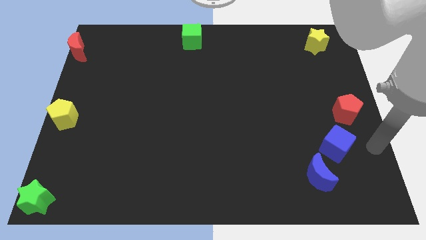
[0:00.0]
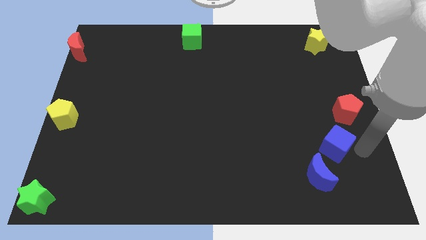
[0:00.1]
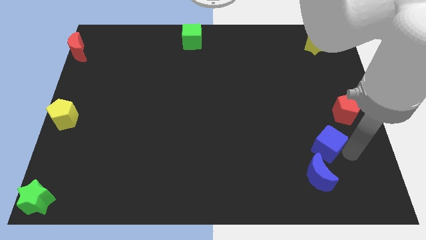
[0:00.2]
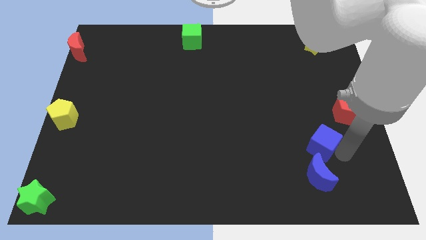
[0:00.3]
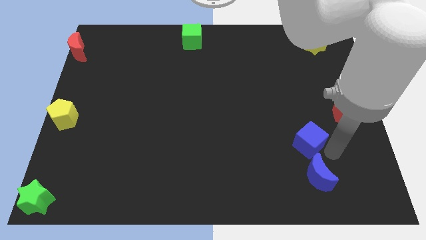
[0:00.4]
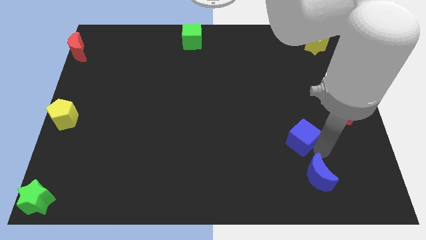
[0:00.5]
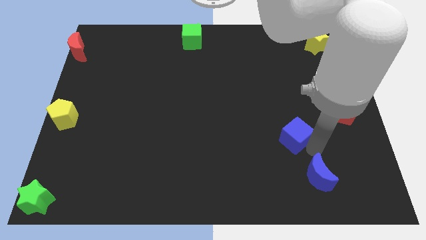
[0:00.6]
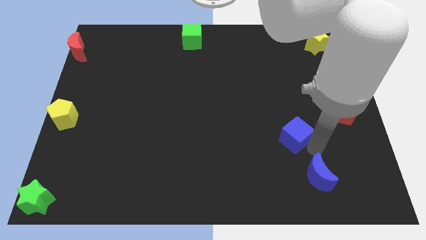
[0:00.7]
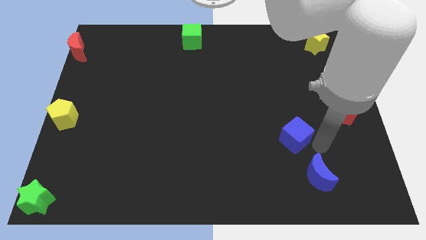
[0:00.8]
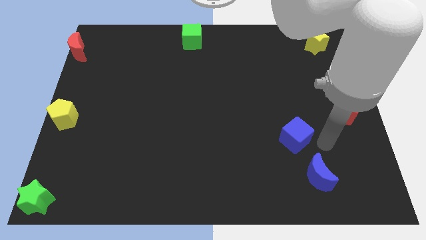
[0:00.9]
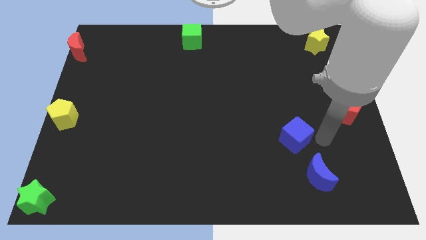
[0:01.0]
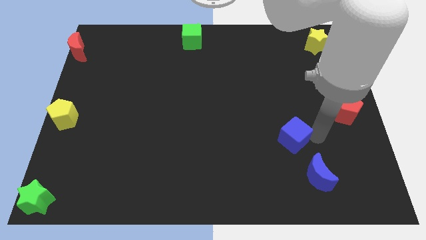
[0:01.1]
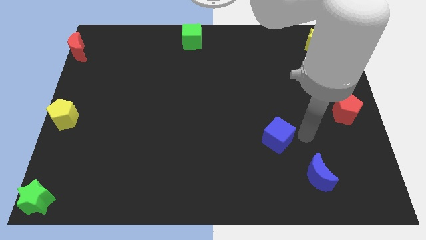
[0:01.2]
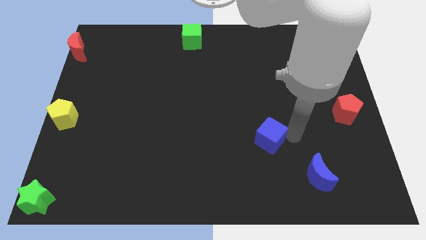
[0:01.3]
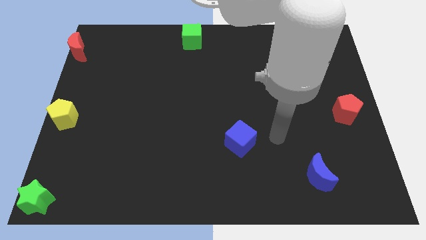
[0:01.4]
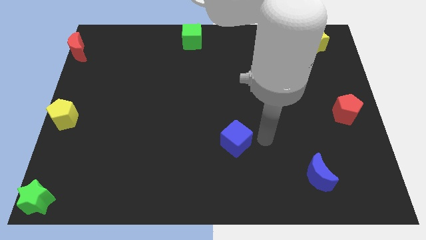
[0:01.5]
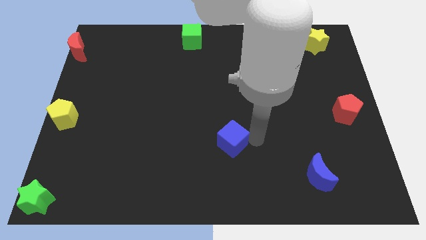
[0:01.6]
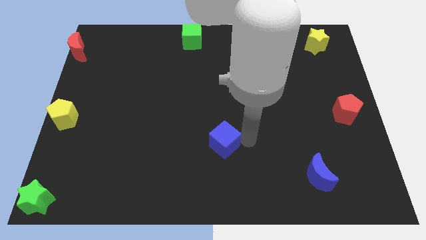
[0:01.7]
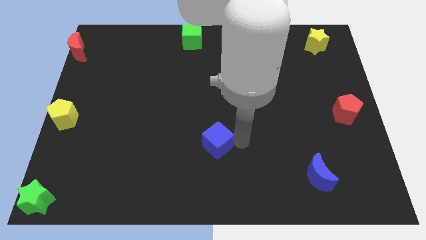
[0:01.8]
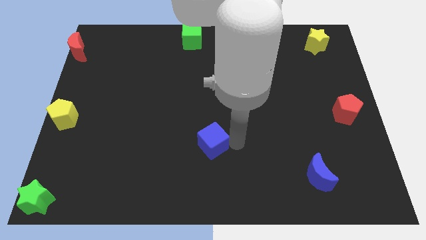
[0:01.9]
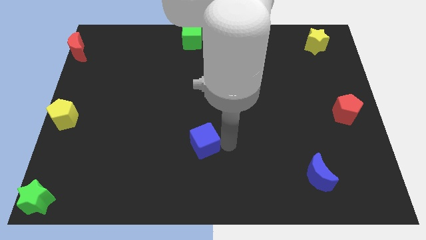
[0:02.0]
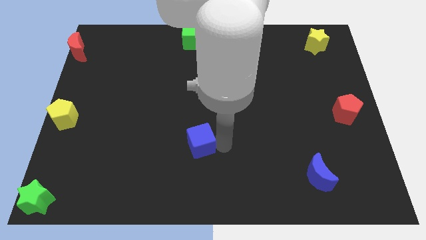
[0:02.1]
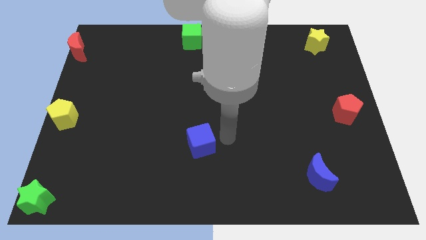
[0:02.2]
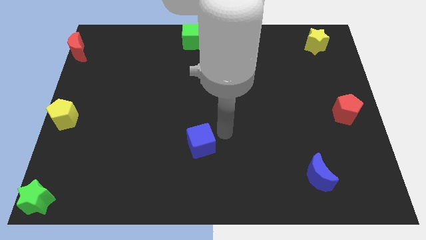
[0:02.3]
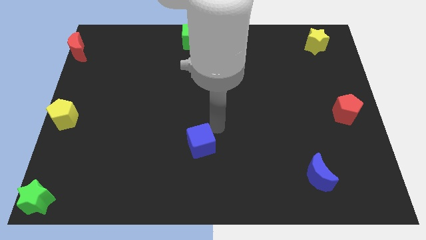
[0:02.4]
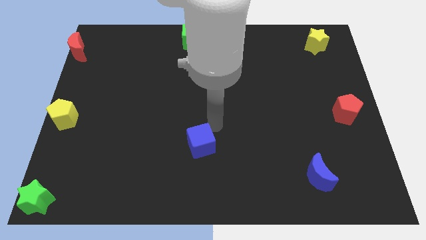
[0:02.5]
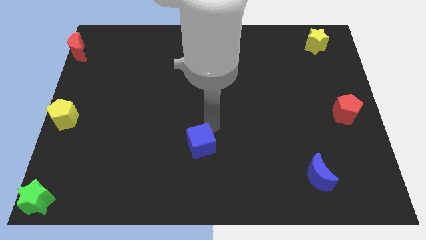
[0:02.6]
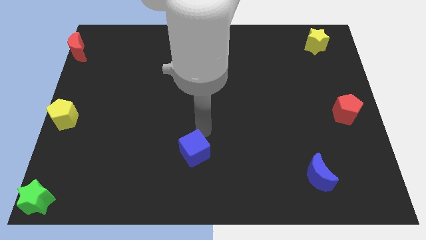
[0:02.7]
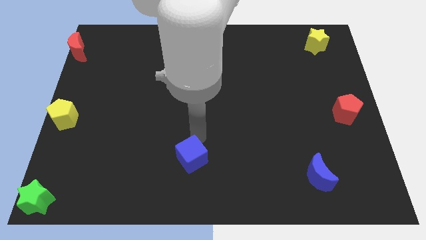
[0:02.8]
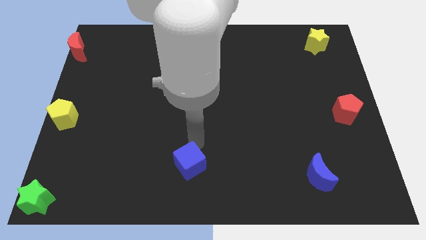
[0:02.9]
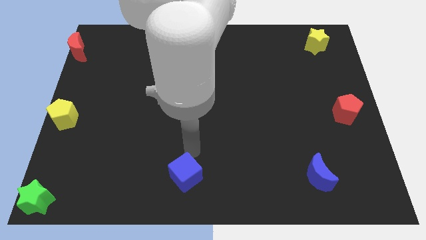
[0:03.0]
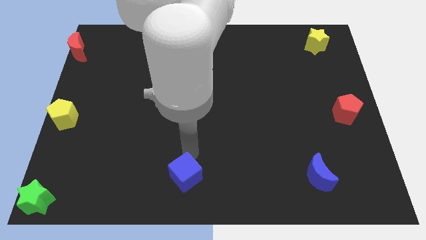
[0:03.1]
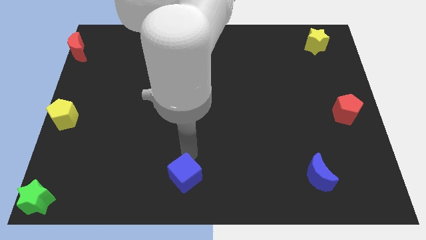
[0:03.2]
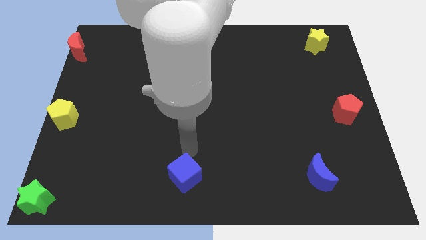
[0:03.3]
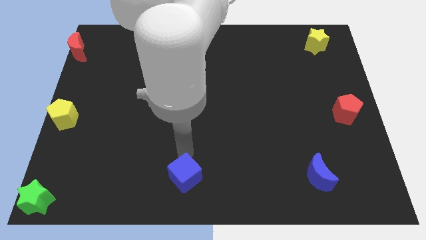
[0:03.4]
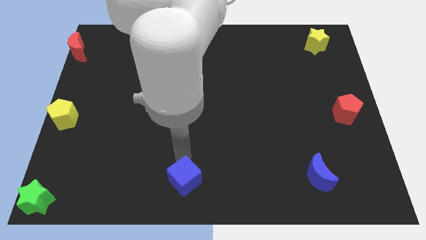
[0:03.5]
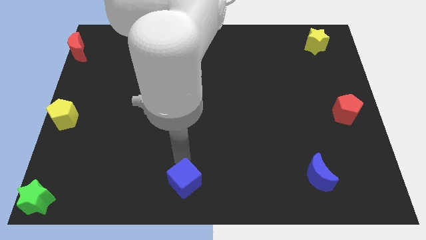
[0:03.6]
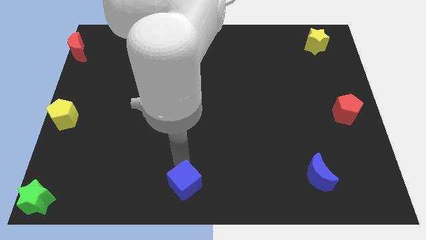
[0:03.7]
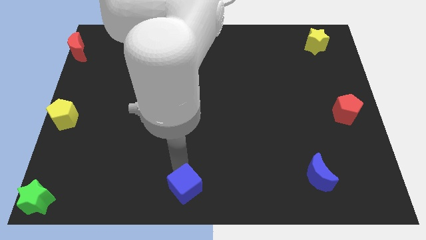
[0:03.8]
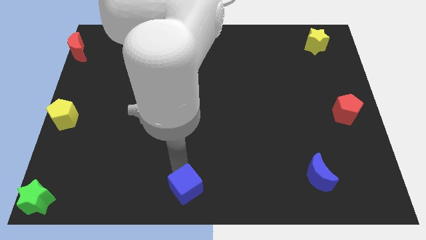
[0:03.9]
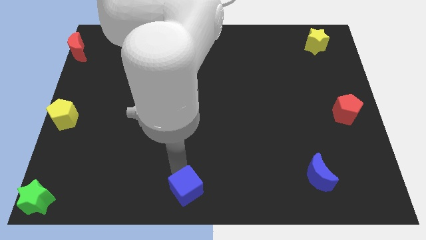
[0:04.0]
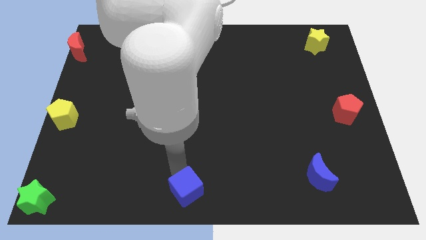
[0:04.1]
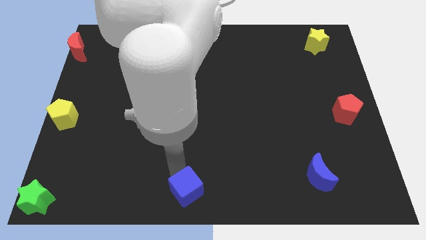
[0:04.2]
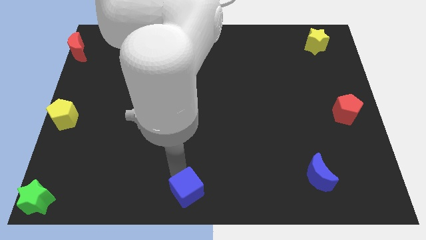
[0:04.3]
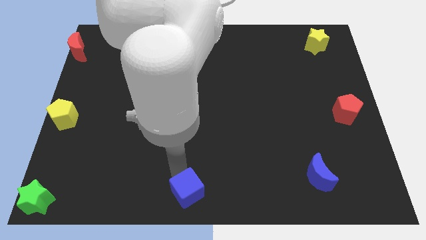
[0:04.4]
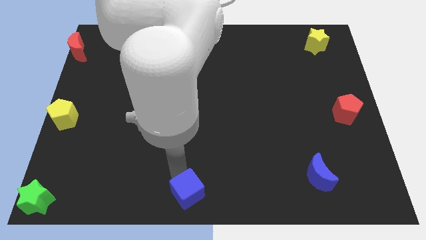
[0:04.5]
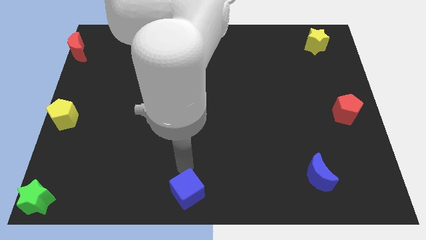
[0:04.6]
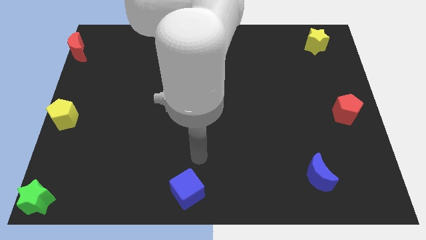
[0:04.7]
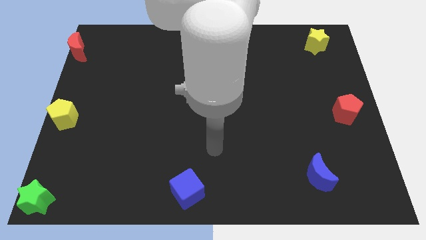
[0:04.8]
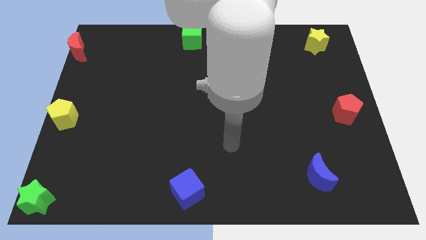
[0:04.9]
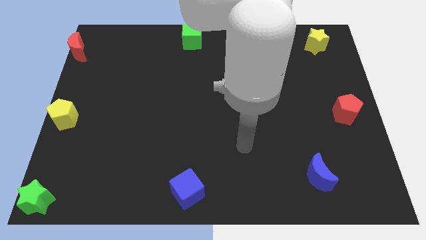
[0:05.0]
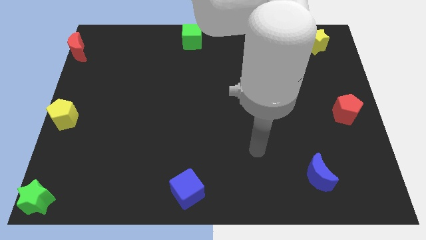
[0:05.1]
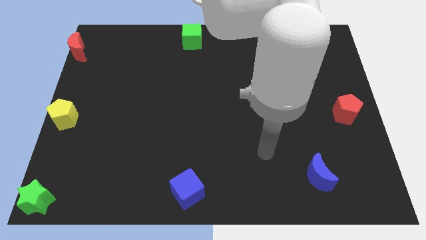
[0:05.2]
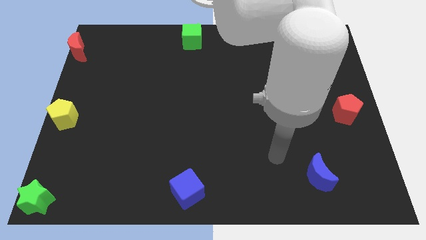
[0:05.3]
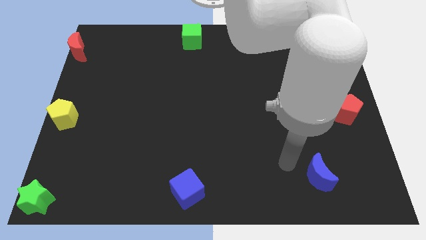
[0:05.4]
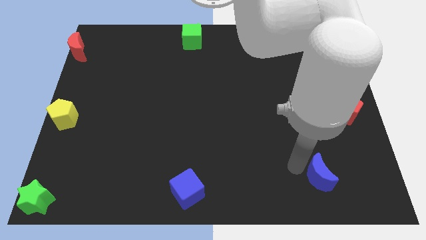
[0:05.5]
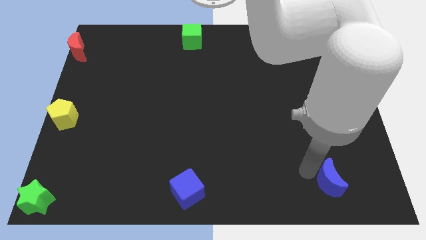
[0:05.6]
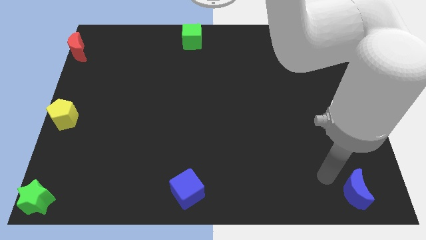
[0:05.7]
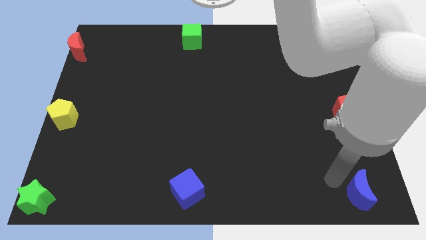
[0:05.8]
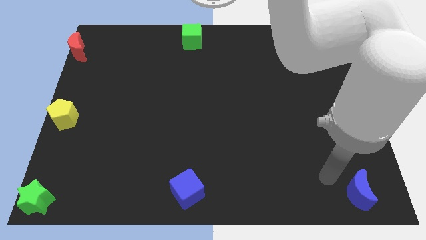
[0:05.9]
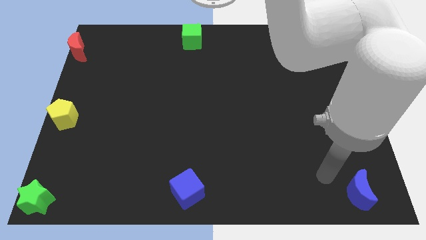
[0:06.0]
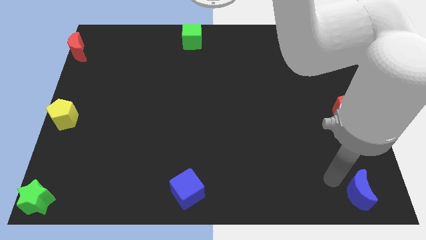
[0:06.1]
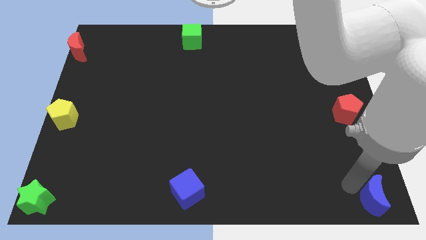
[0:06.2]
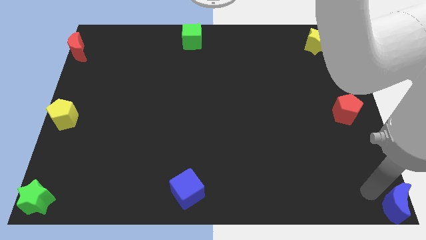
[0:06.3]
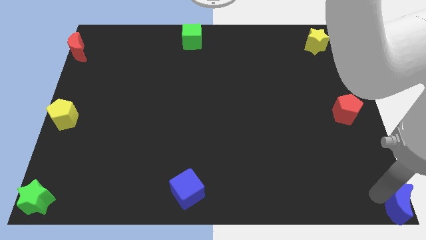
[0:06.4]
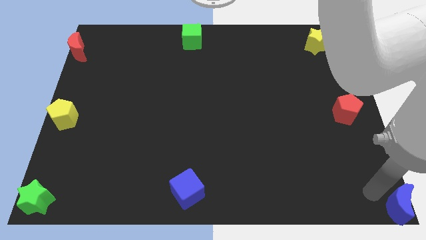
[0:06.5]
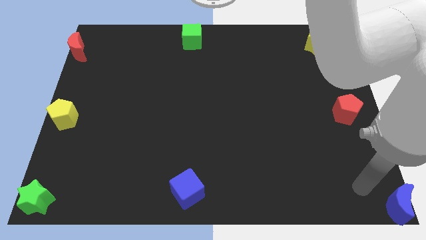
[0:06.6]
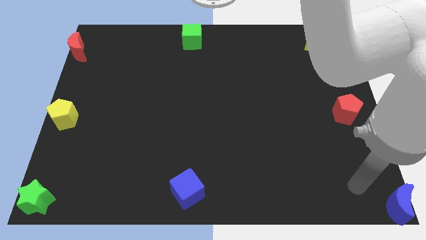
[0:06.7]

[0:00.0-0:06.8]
push the blue cube towards the bottom center of the board

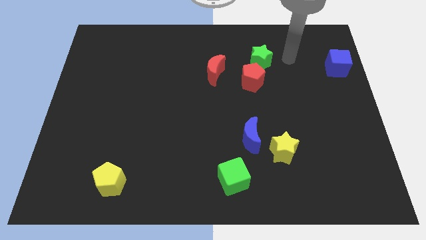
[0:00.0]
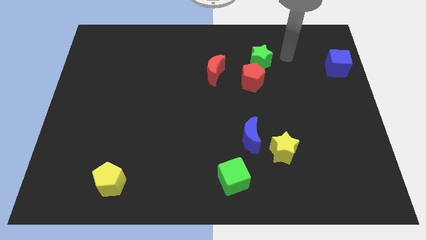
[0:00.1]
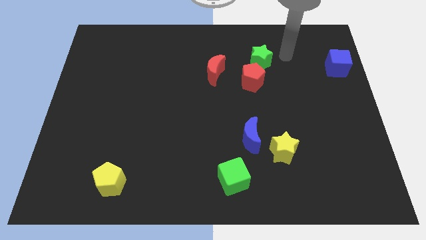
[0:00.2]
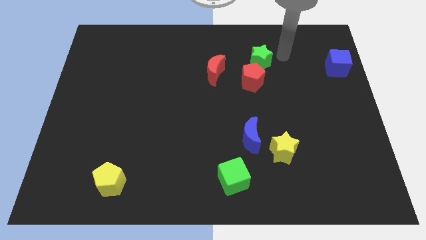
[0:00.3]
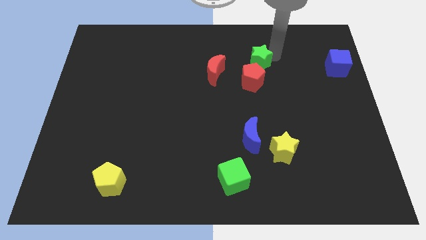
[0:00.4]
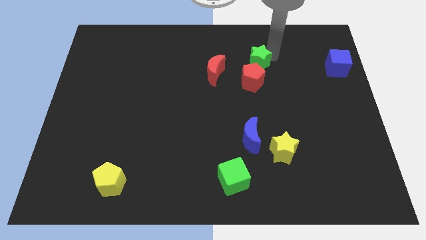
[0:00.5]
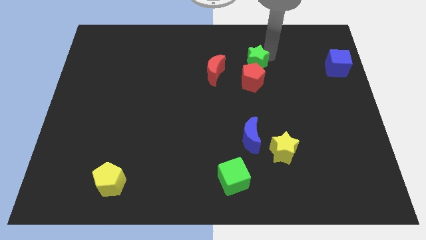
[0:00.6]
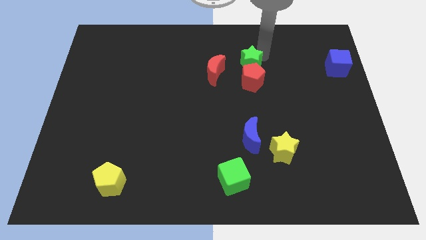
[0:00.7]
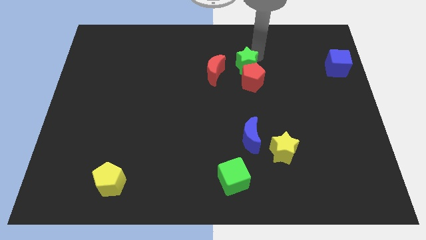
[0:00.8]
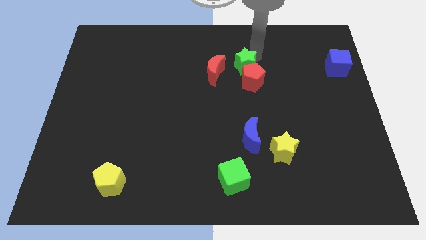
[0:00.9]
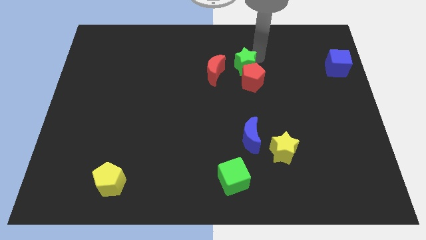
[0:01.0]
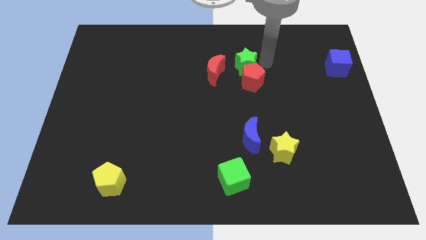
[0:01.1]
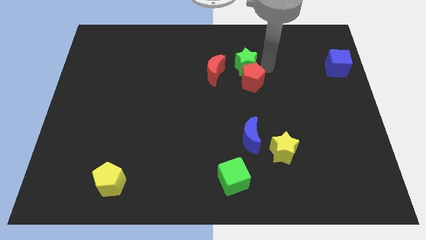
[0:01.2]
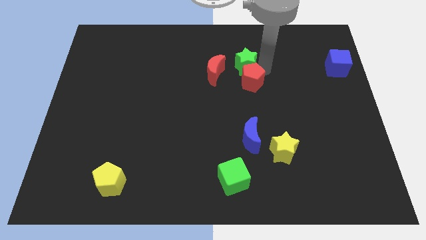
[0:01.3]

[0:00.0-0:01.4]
slide the green star slightly towards the red moon

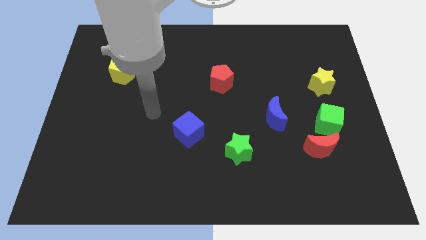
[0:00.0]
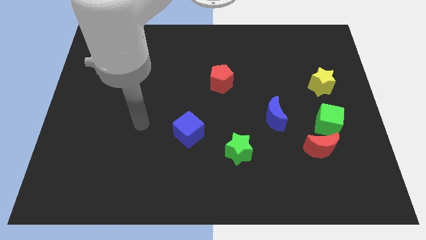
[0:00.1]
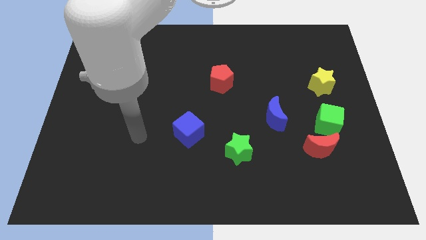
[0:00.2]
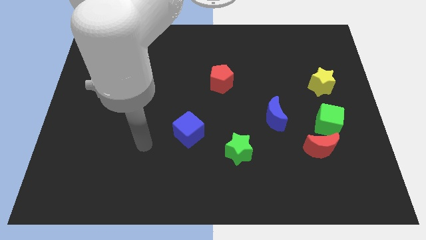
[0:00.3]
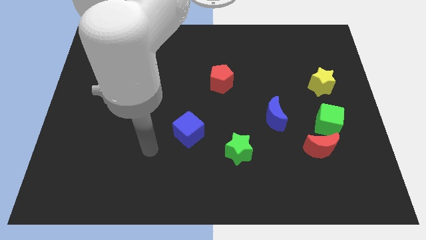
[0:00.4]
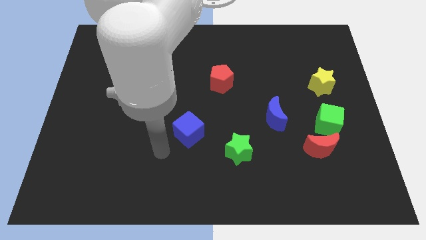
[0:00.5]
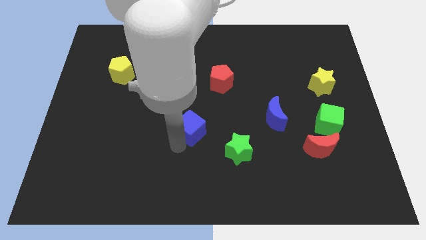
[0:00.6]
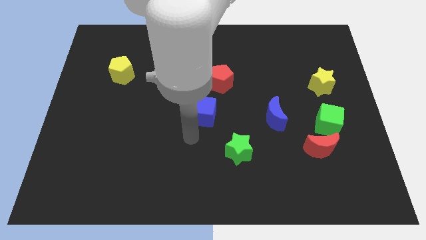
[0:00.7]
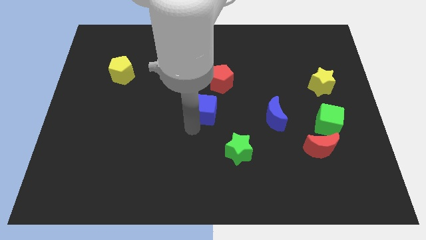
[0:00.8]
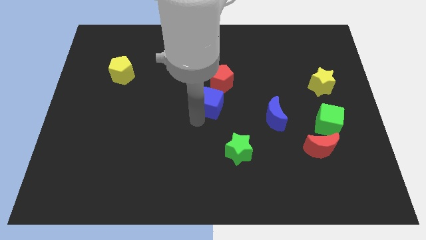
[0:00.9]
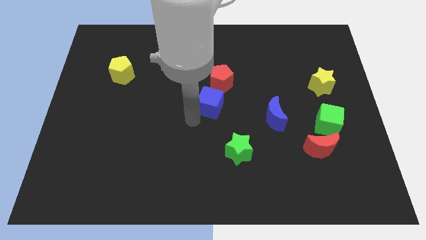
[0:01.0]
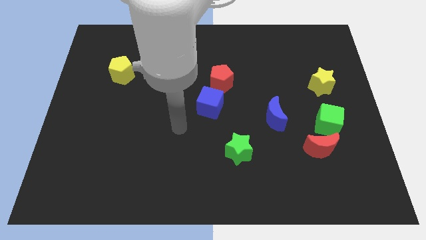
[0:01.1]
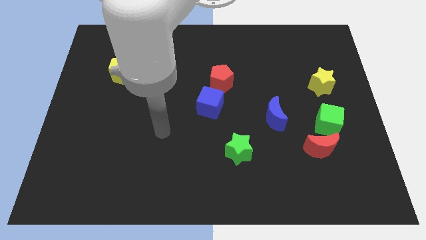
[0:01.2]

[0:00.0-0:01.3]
put the blue cube at the bottom left side of the red pentagon
